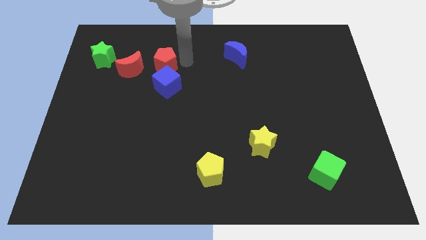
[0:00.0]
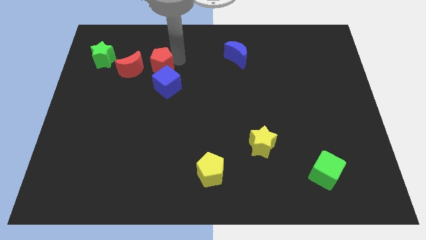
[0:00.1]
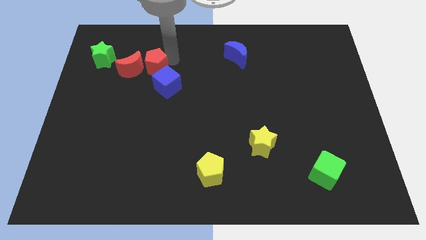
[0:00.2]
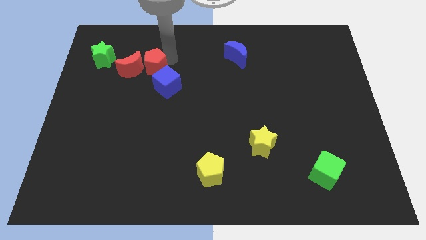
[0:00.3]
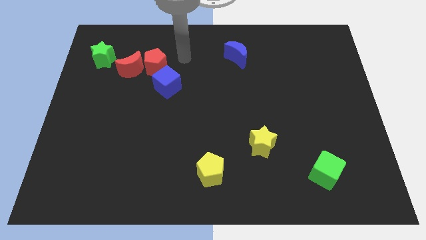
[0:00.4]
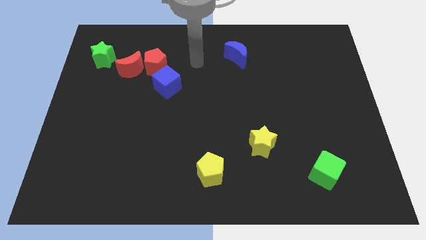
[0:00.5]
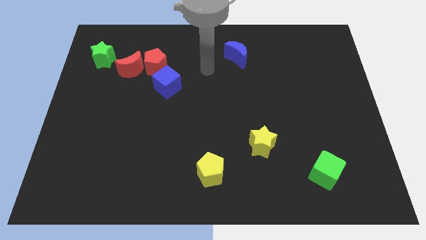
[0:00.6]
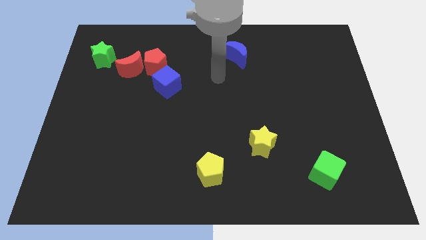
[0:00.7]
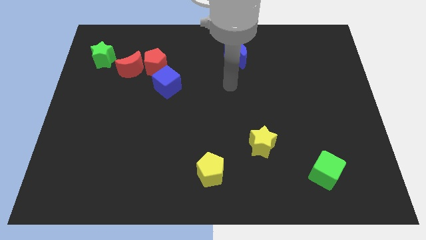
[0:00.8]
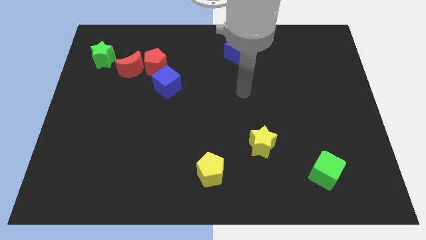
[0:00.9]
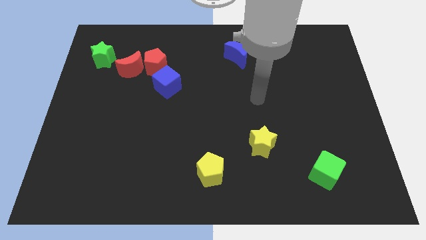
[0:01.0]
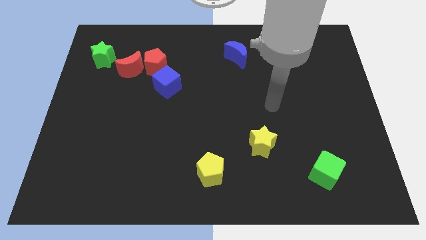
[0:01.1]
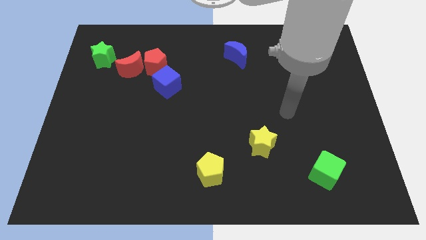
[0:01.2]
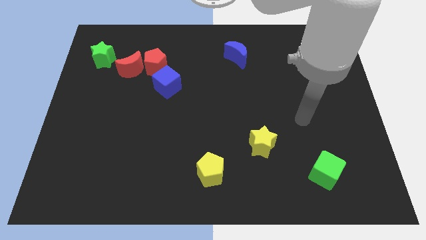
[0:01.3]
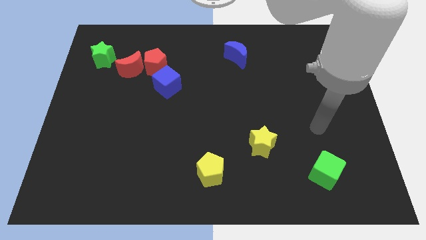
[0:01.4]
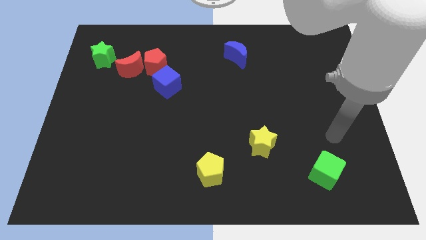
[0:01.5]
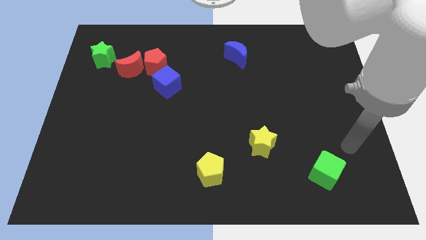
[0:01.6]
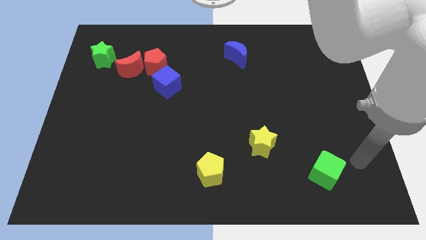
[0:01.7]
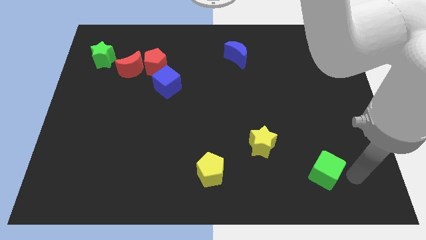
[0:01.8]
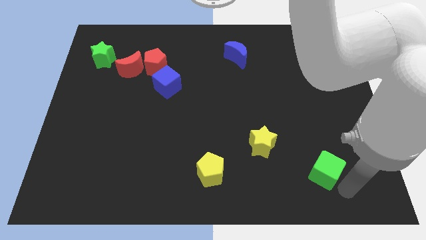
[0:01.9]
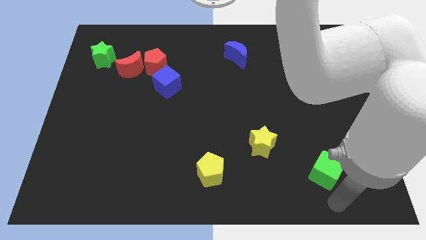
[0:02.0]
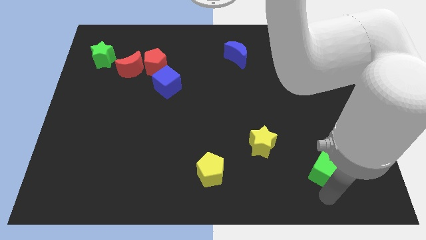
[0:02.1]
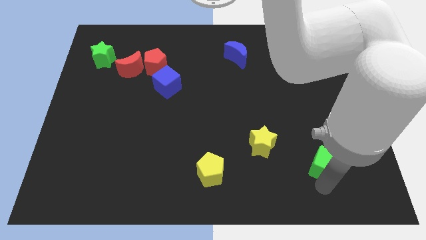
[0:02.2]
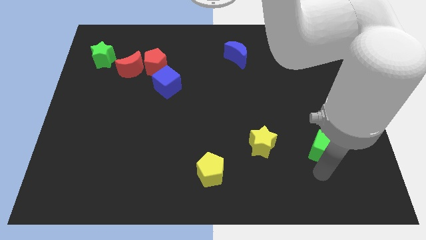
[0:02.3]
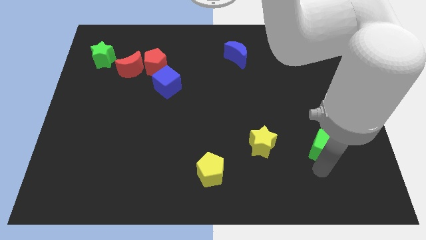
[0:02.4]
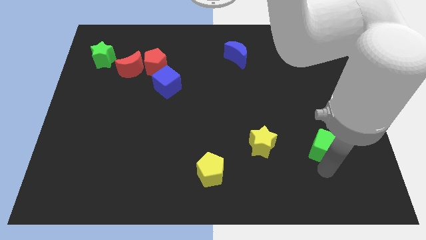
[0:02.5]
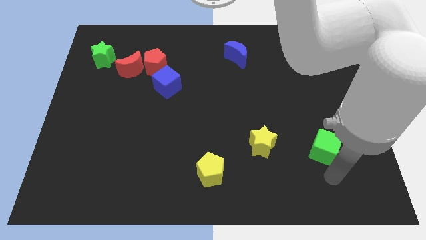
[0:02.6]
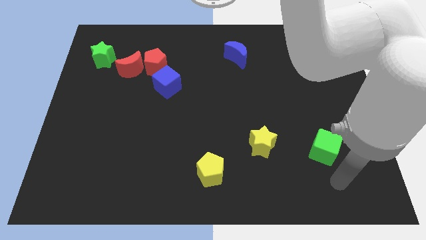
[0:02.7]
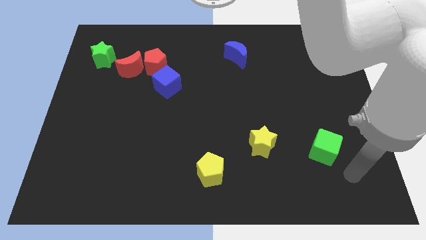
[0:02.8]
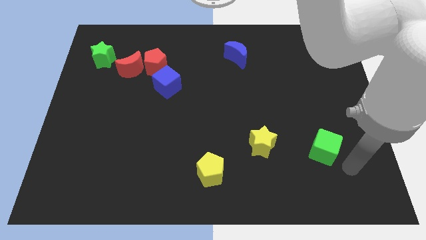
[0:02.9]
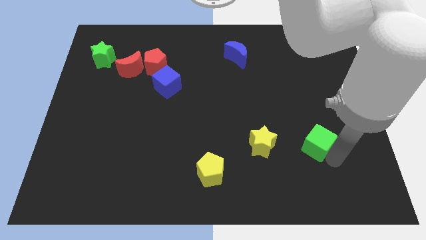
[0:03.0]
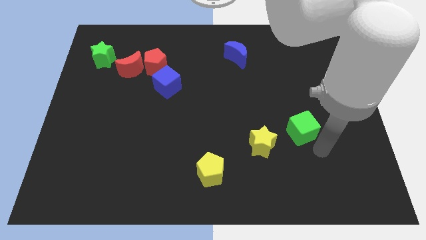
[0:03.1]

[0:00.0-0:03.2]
move the green cube parallel right to the yellow star

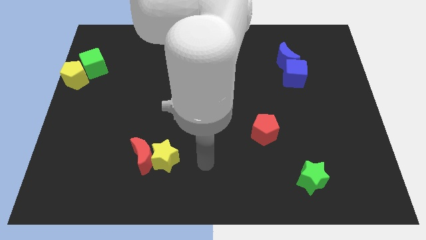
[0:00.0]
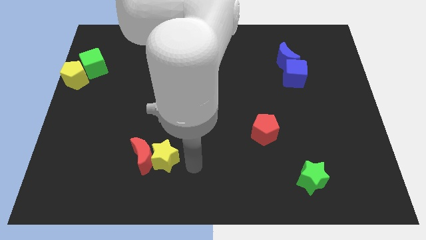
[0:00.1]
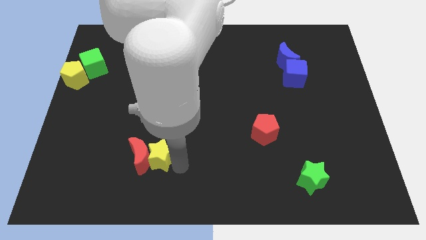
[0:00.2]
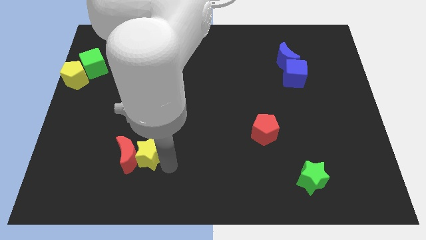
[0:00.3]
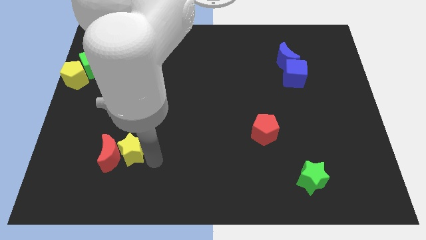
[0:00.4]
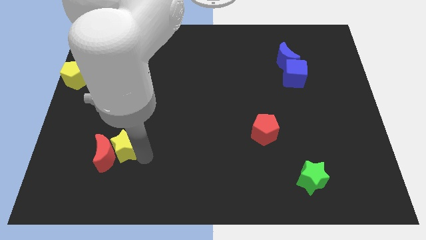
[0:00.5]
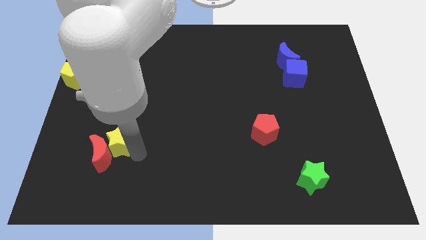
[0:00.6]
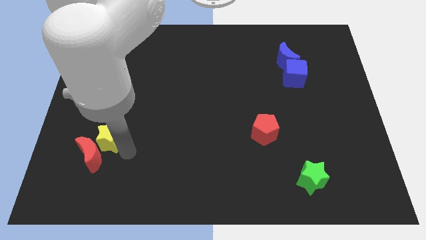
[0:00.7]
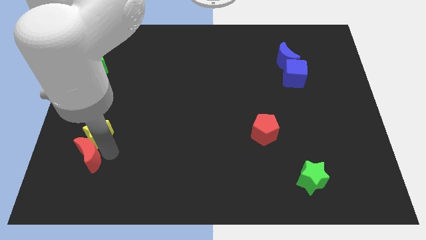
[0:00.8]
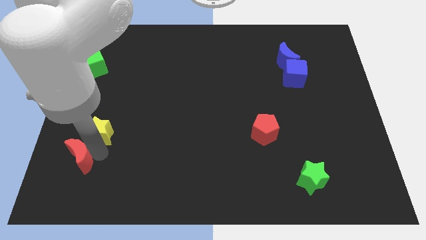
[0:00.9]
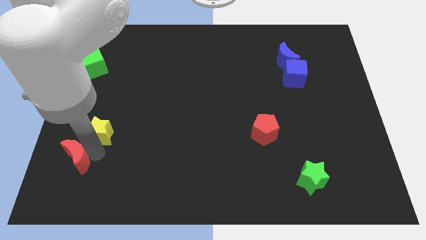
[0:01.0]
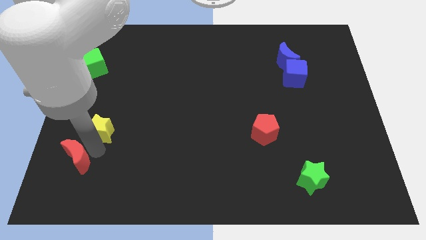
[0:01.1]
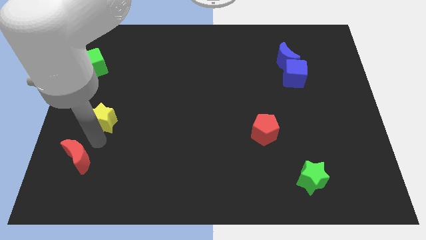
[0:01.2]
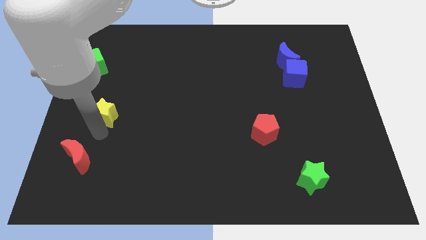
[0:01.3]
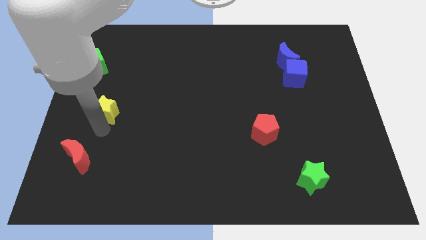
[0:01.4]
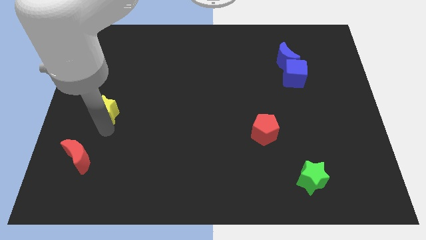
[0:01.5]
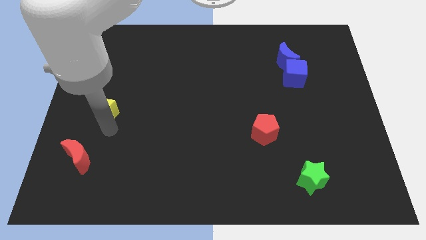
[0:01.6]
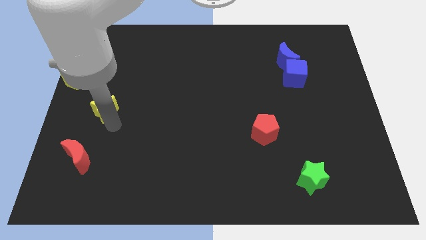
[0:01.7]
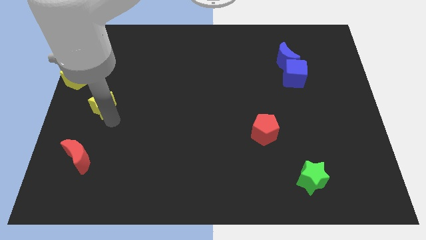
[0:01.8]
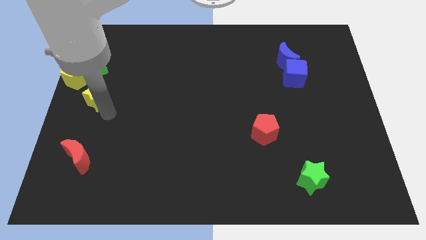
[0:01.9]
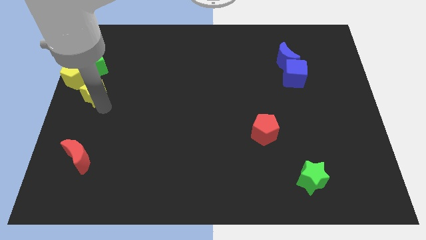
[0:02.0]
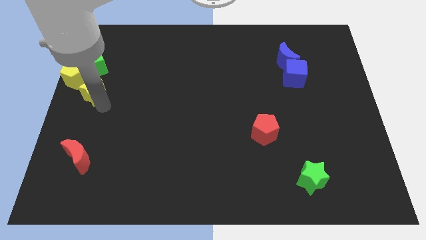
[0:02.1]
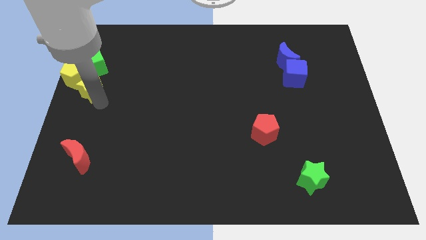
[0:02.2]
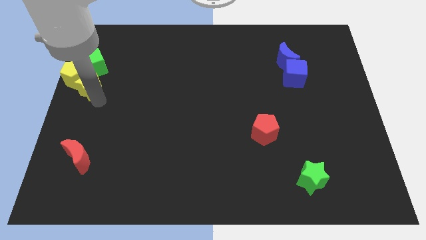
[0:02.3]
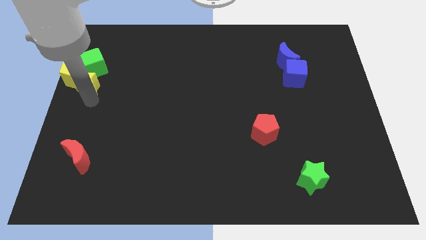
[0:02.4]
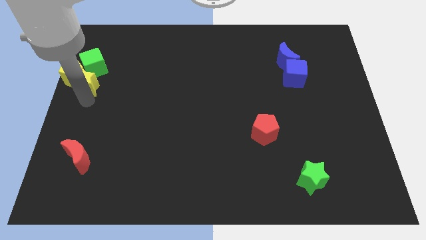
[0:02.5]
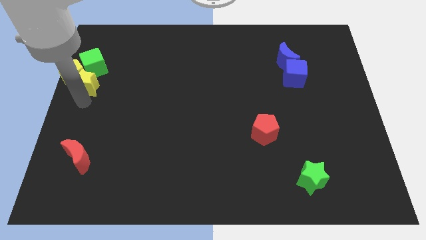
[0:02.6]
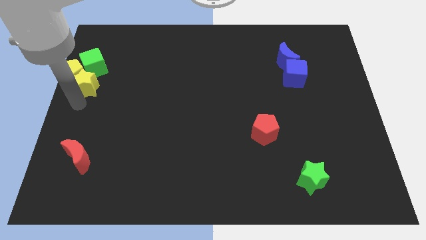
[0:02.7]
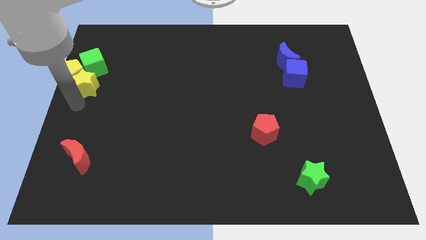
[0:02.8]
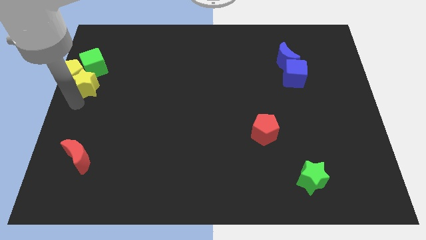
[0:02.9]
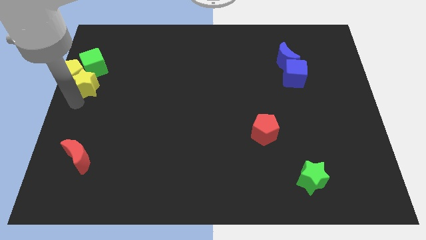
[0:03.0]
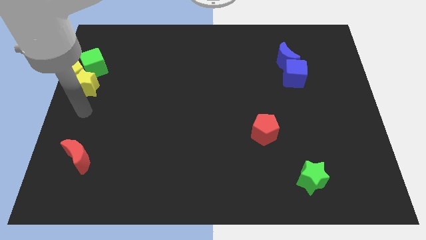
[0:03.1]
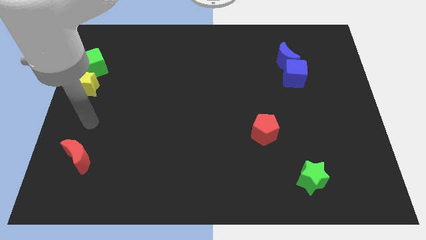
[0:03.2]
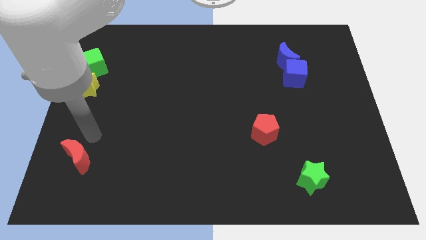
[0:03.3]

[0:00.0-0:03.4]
separate the yellow star and the red moon

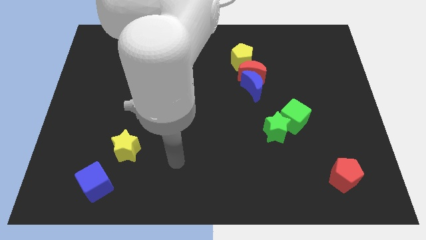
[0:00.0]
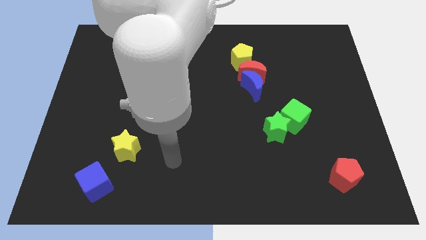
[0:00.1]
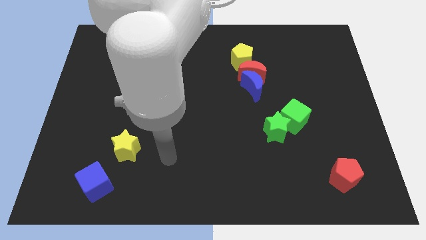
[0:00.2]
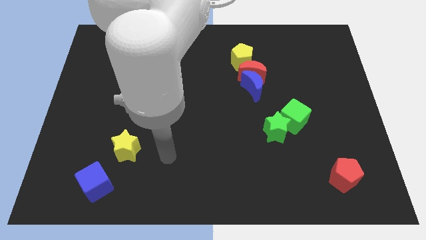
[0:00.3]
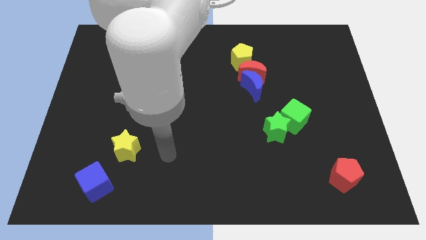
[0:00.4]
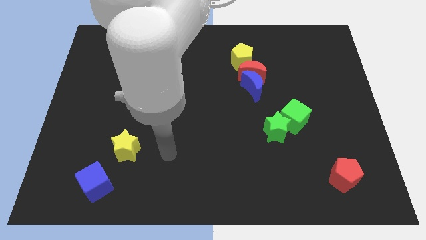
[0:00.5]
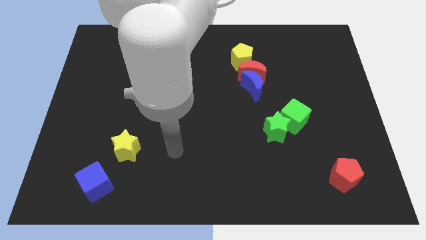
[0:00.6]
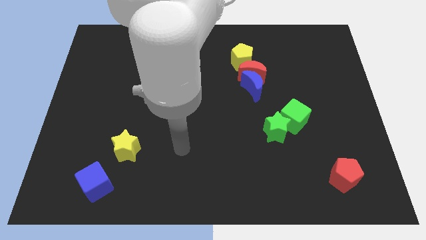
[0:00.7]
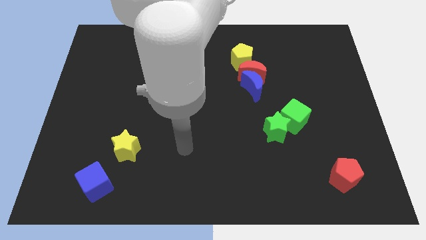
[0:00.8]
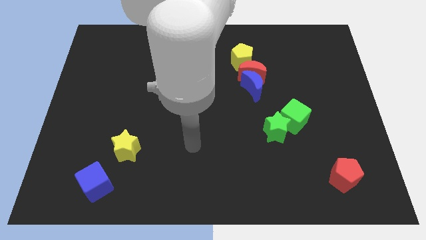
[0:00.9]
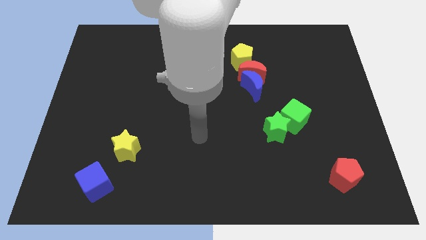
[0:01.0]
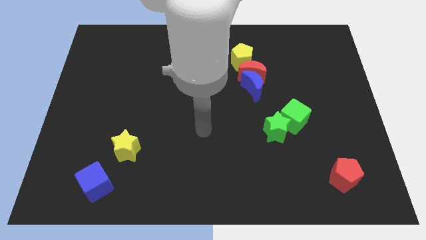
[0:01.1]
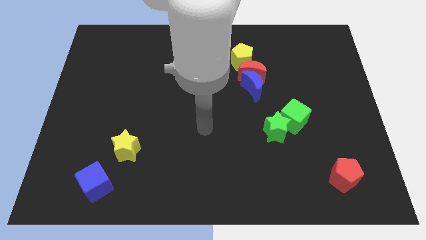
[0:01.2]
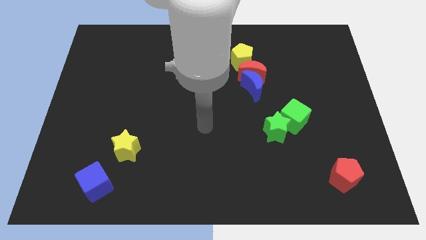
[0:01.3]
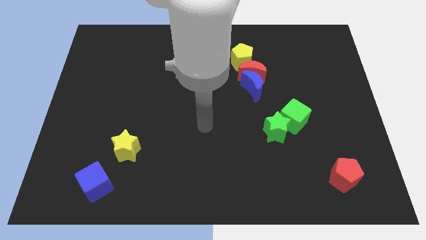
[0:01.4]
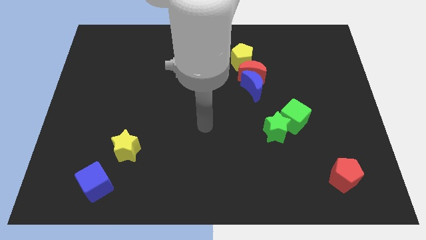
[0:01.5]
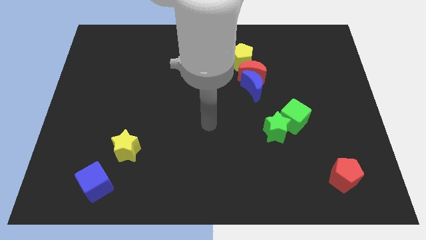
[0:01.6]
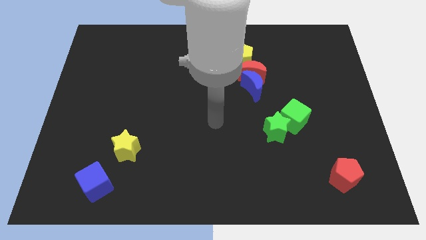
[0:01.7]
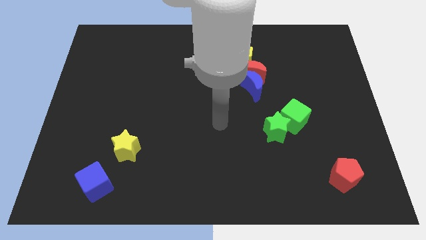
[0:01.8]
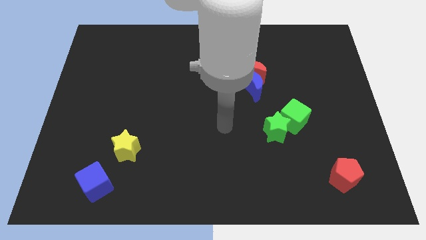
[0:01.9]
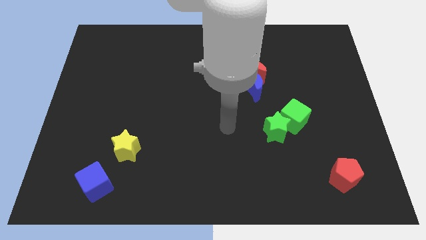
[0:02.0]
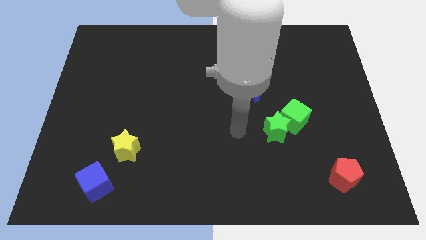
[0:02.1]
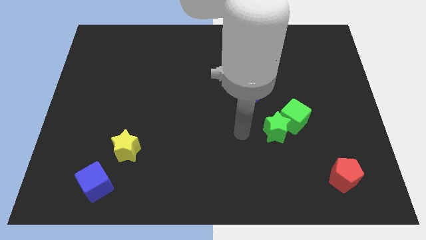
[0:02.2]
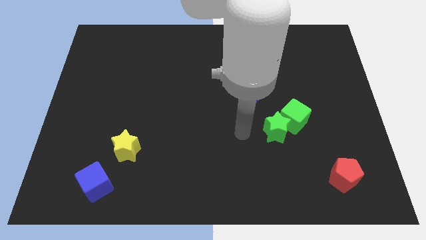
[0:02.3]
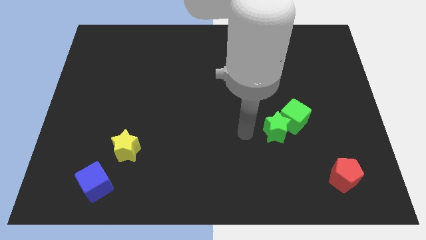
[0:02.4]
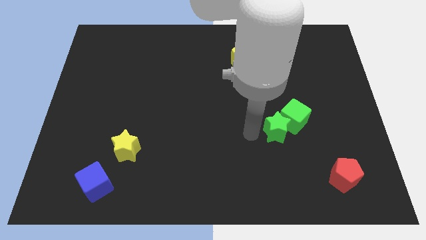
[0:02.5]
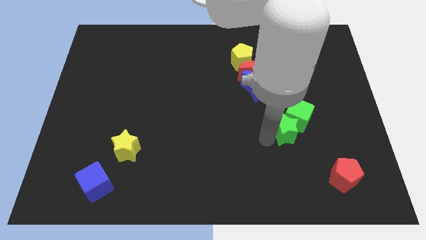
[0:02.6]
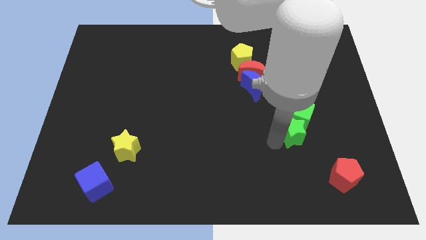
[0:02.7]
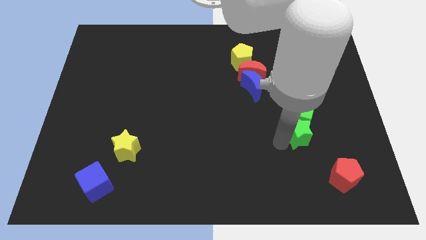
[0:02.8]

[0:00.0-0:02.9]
place the green star below the green cube
